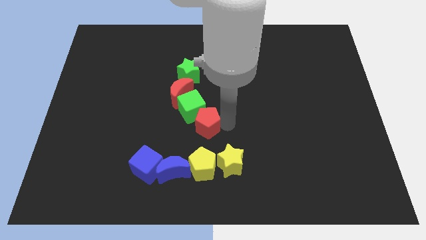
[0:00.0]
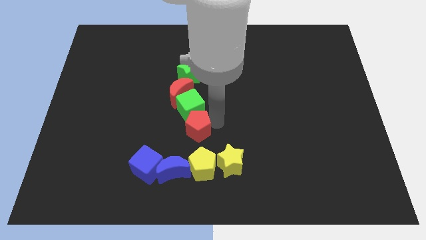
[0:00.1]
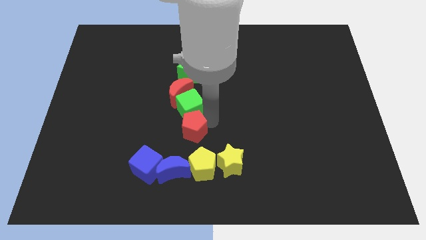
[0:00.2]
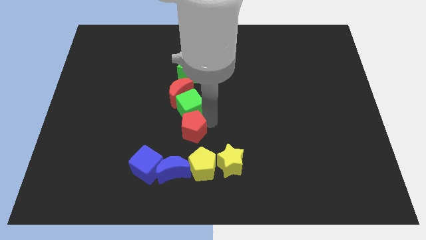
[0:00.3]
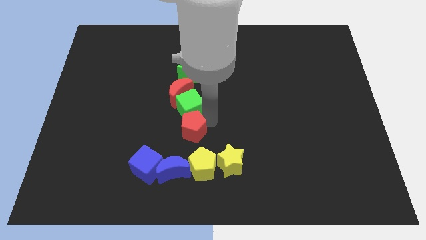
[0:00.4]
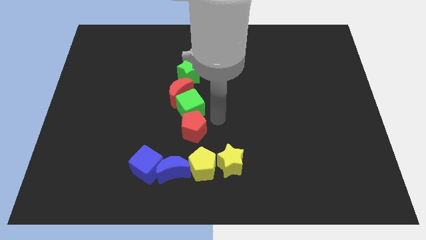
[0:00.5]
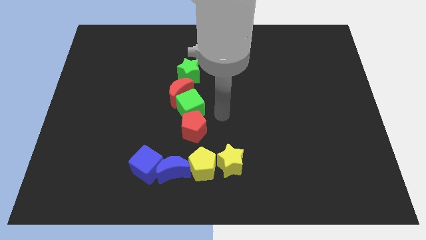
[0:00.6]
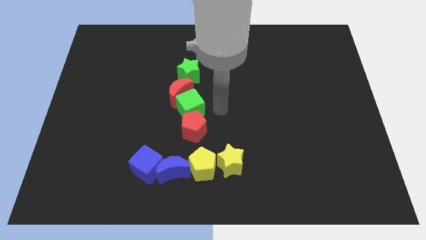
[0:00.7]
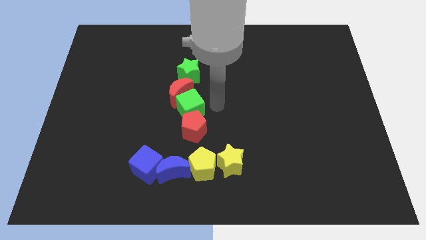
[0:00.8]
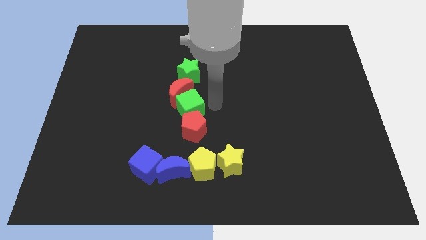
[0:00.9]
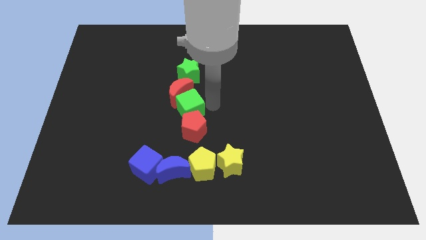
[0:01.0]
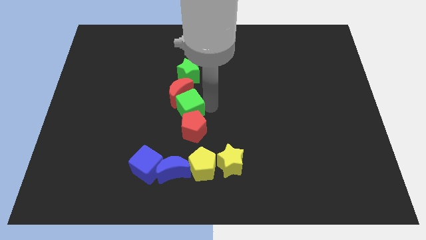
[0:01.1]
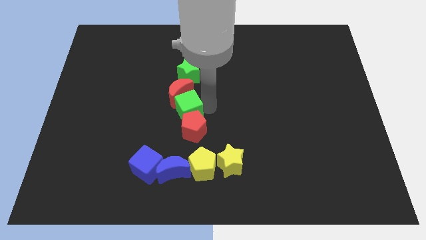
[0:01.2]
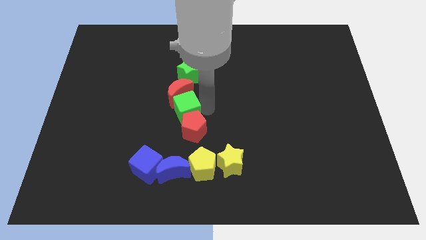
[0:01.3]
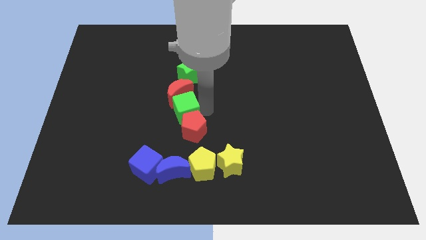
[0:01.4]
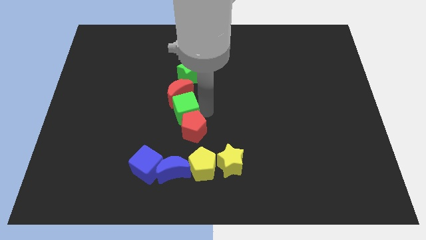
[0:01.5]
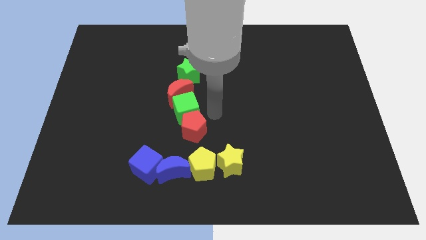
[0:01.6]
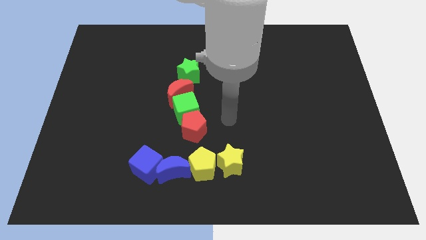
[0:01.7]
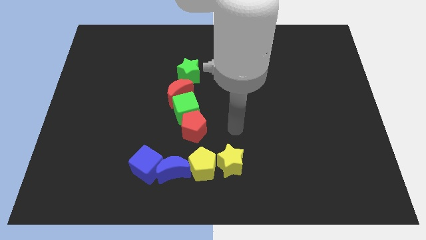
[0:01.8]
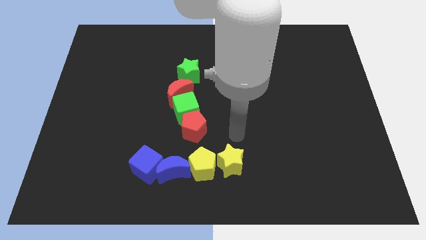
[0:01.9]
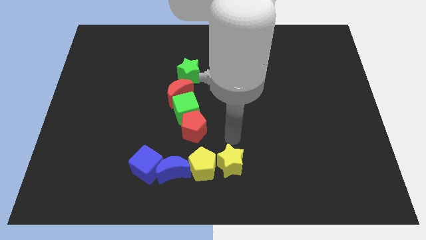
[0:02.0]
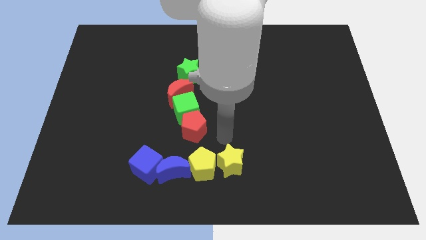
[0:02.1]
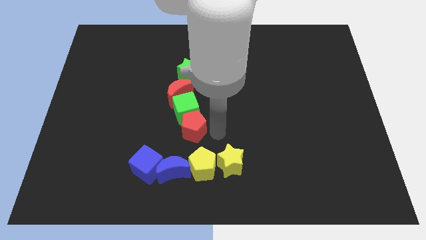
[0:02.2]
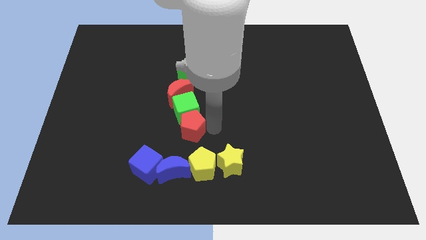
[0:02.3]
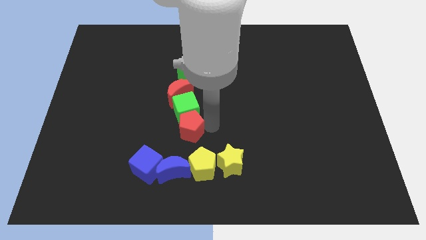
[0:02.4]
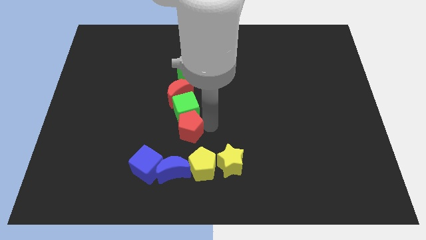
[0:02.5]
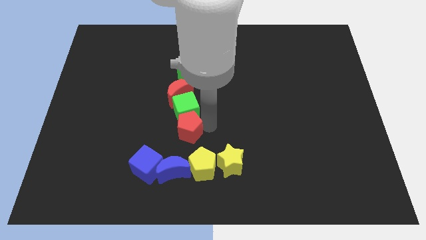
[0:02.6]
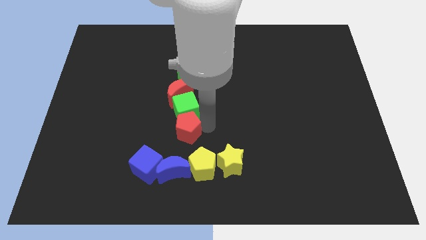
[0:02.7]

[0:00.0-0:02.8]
point your arm beside red pentagon

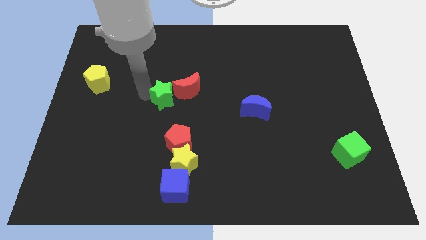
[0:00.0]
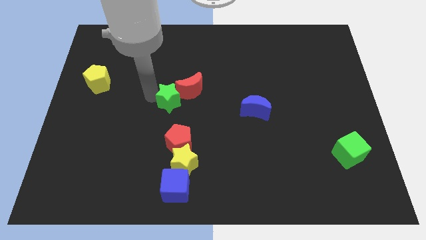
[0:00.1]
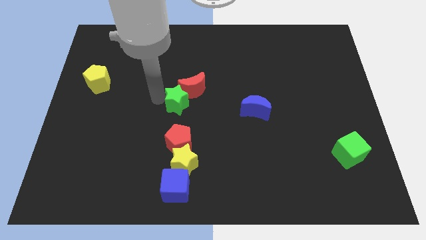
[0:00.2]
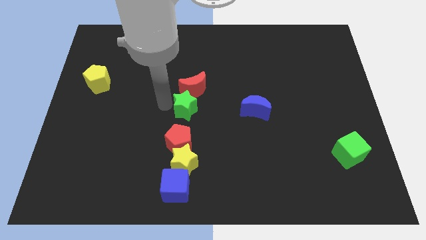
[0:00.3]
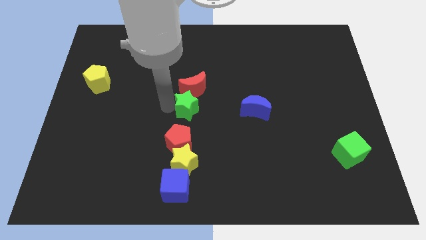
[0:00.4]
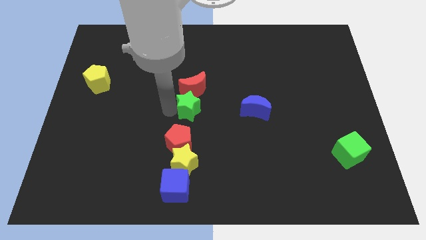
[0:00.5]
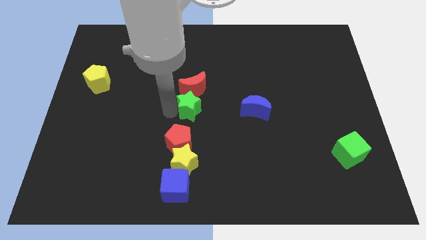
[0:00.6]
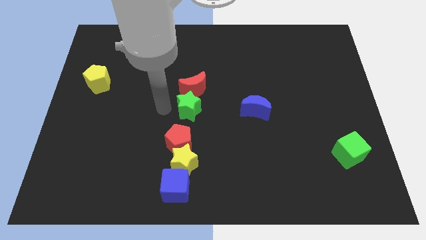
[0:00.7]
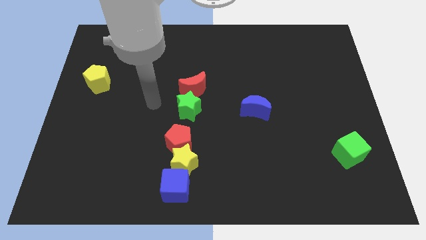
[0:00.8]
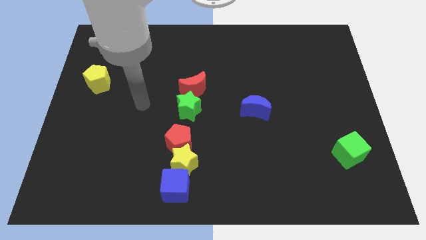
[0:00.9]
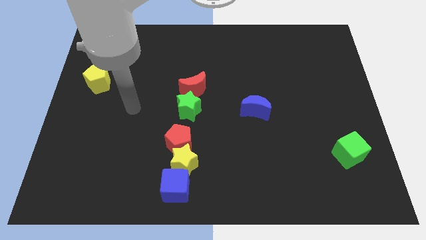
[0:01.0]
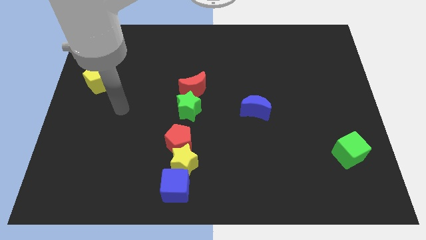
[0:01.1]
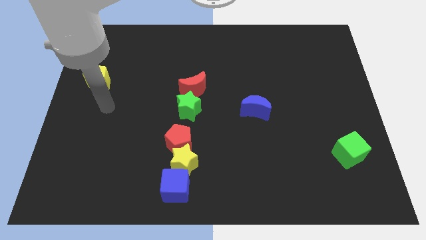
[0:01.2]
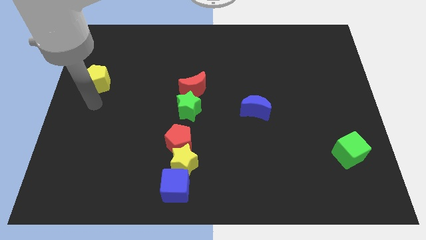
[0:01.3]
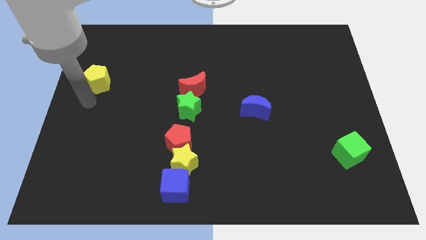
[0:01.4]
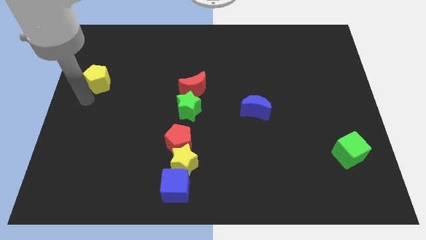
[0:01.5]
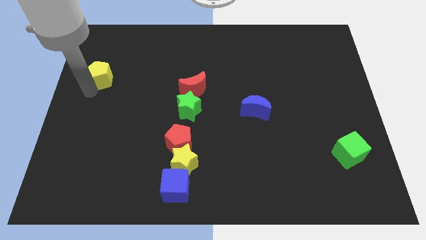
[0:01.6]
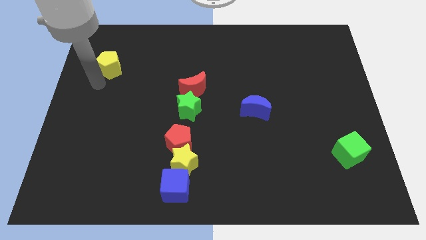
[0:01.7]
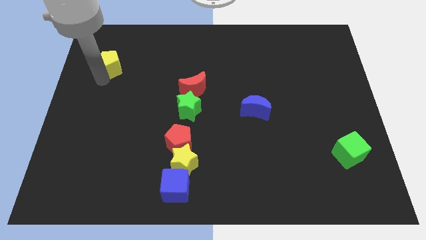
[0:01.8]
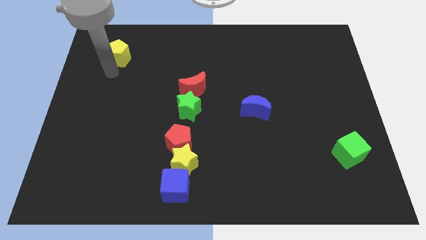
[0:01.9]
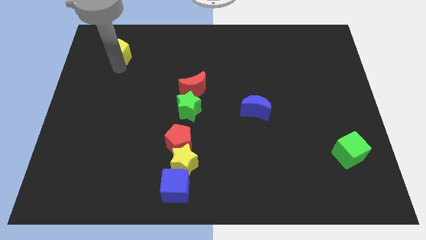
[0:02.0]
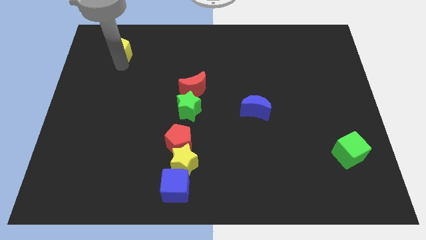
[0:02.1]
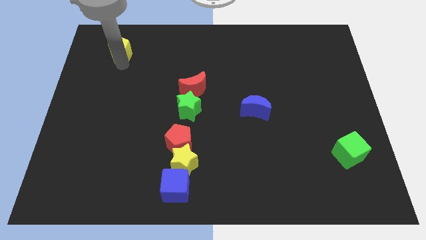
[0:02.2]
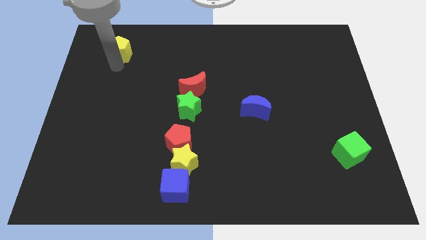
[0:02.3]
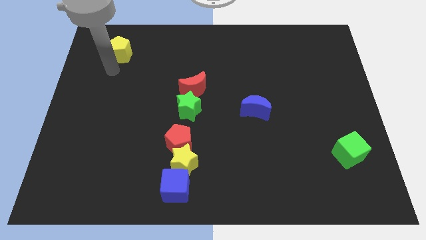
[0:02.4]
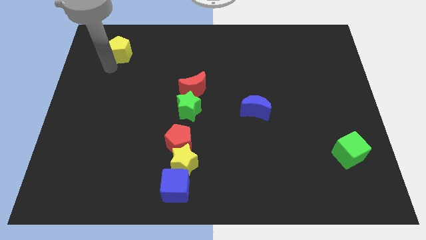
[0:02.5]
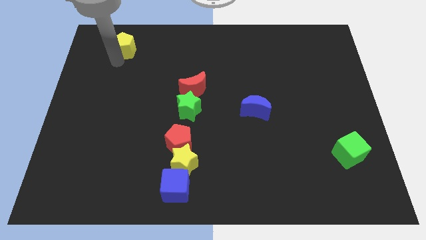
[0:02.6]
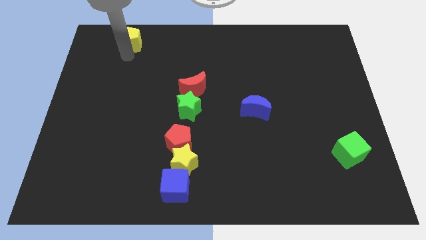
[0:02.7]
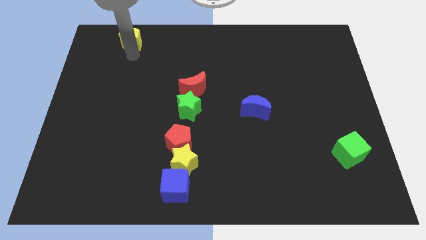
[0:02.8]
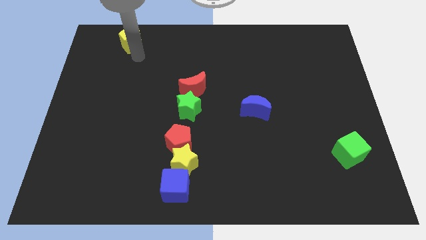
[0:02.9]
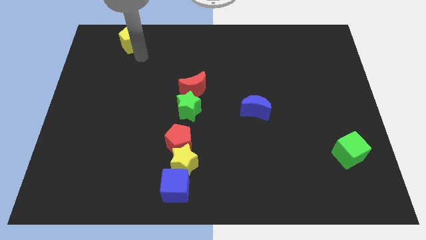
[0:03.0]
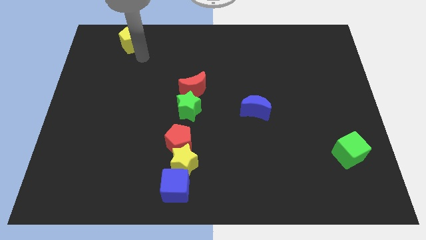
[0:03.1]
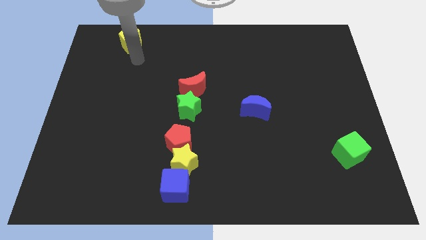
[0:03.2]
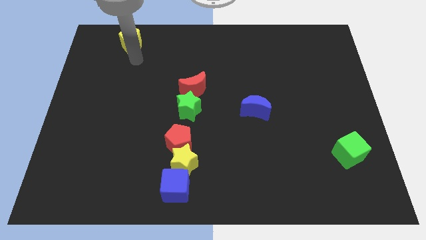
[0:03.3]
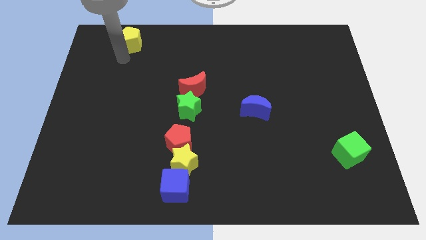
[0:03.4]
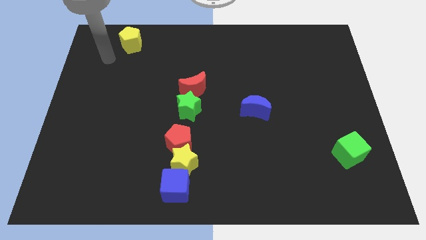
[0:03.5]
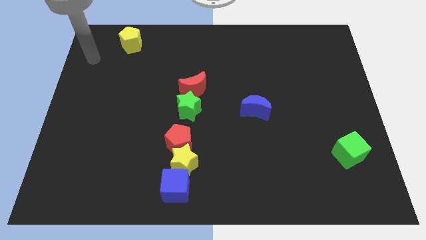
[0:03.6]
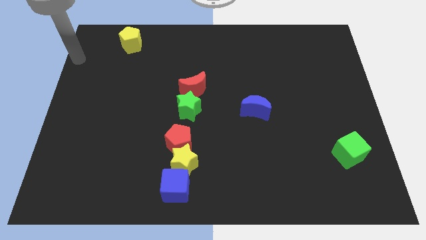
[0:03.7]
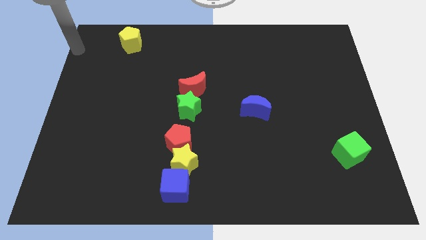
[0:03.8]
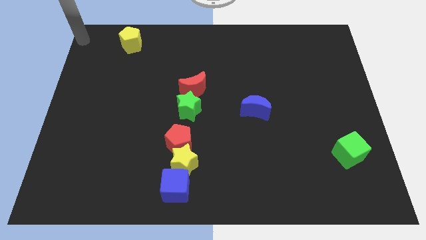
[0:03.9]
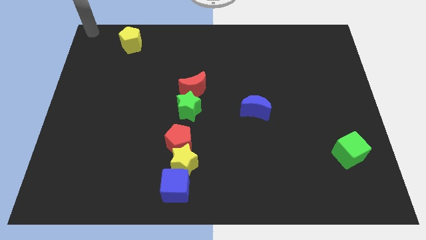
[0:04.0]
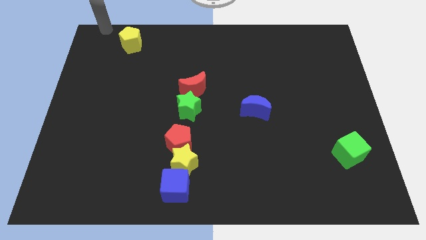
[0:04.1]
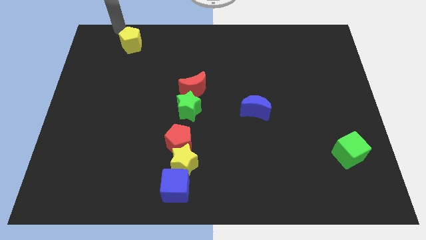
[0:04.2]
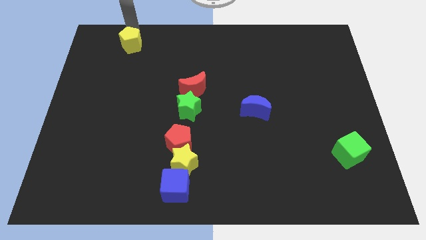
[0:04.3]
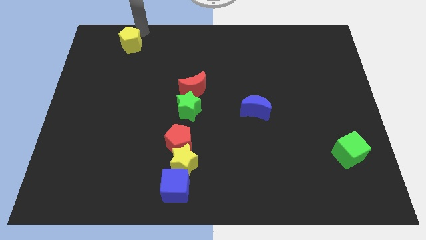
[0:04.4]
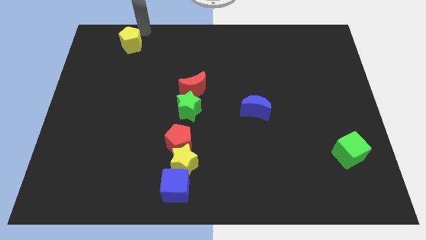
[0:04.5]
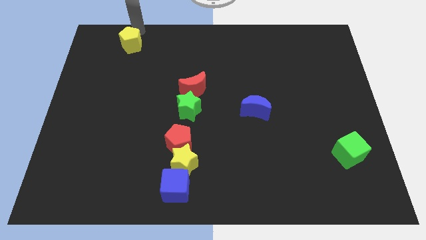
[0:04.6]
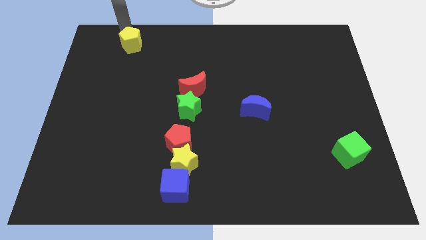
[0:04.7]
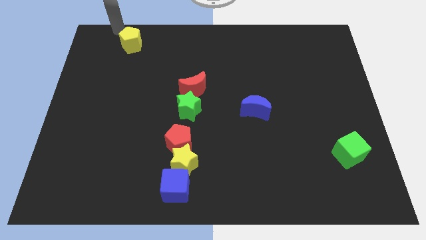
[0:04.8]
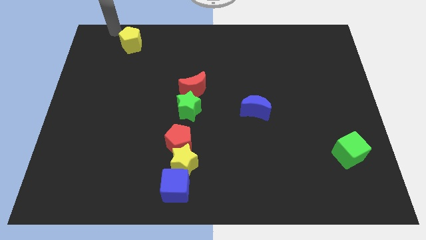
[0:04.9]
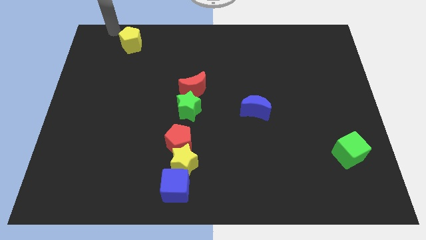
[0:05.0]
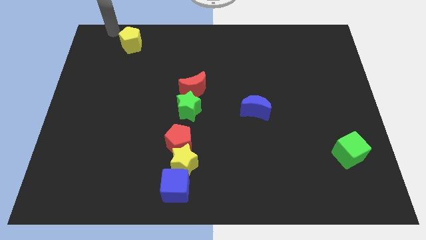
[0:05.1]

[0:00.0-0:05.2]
push yellow pentagon to the top left

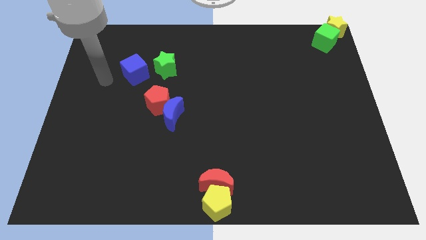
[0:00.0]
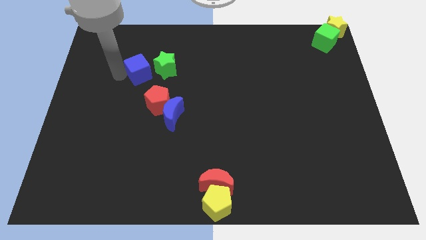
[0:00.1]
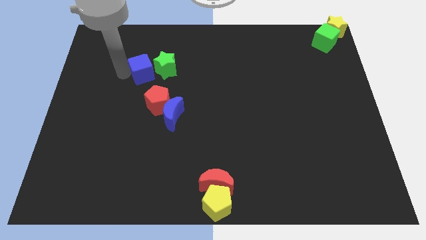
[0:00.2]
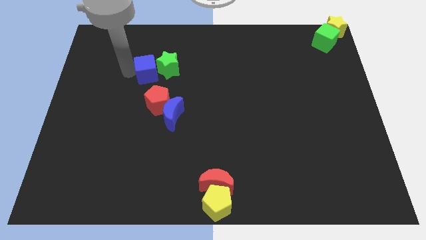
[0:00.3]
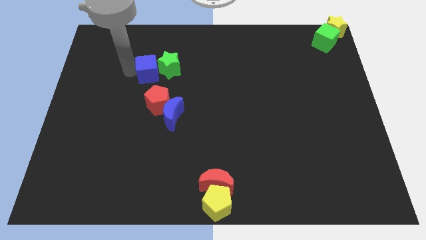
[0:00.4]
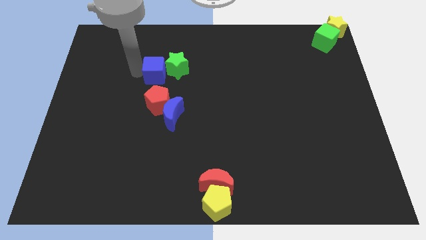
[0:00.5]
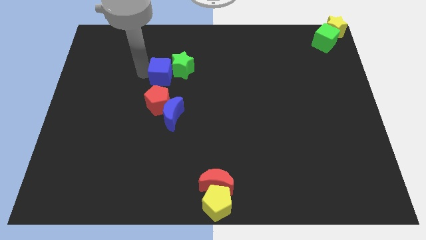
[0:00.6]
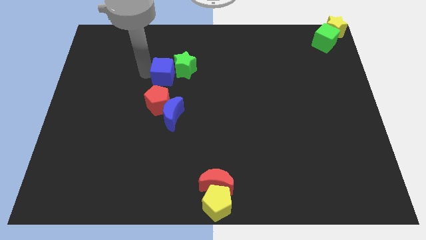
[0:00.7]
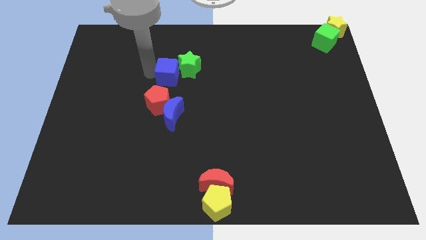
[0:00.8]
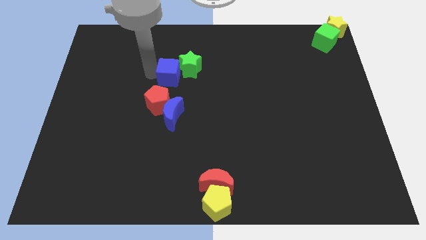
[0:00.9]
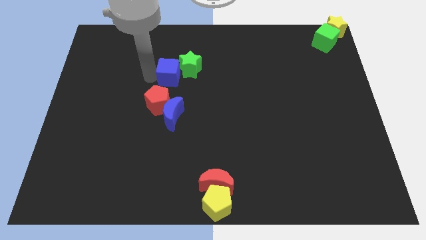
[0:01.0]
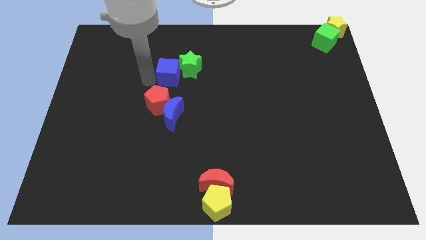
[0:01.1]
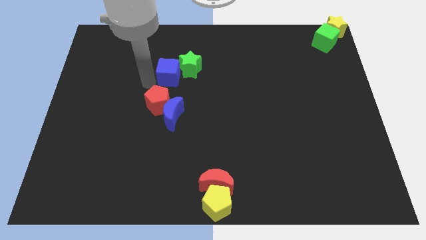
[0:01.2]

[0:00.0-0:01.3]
make the blue cube to touch the left side of the green star
